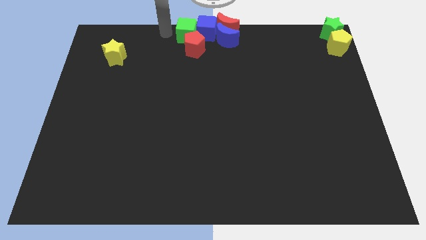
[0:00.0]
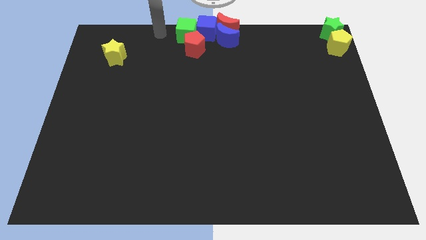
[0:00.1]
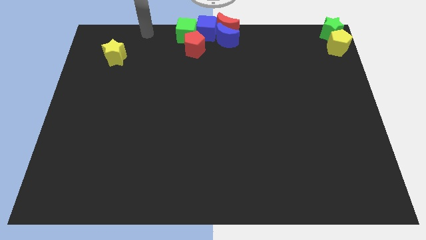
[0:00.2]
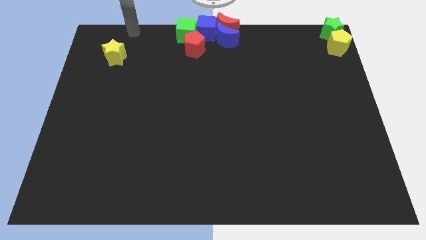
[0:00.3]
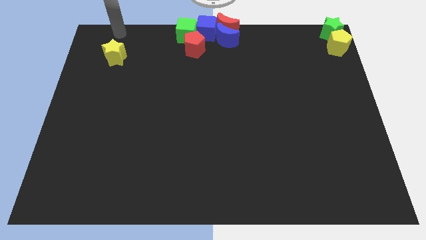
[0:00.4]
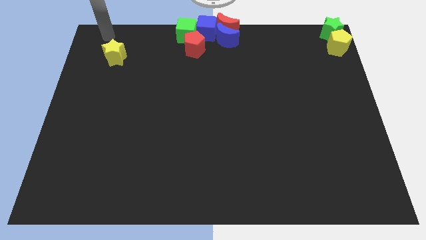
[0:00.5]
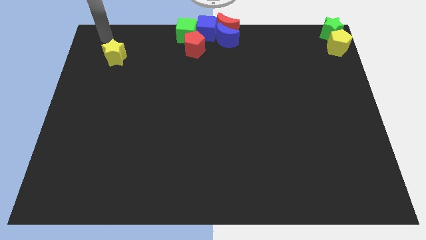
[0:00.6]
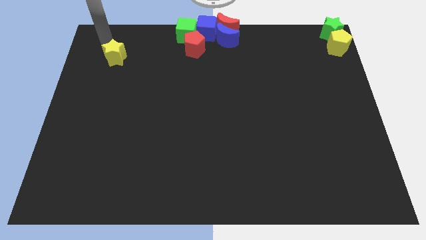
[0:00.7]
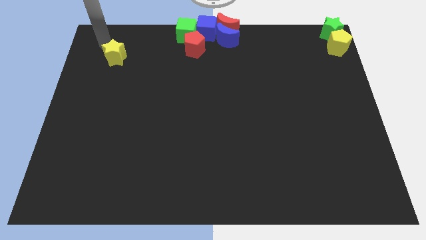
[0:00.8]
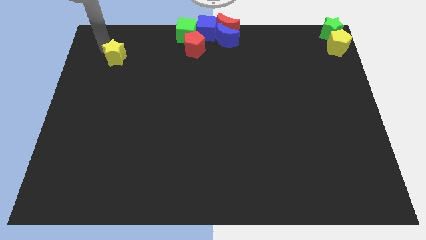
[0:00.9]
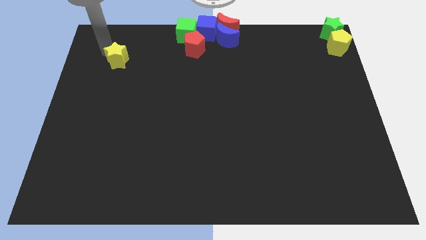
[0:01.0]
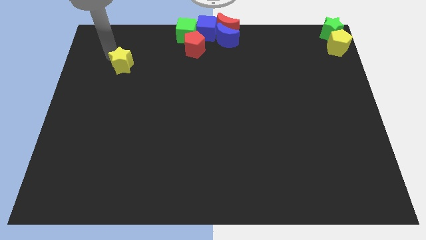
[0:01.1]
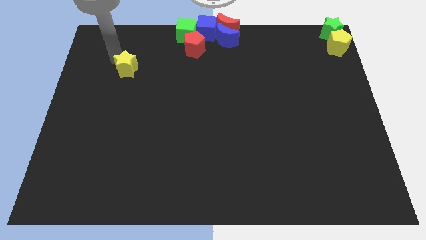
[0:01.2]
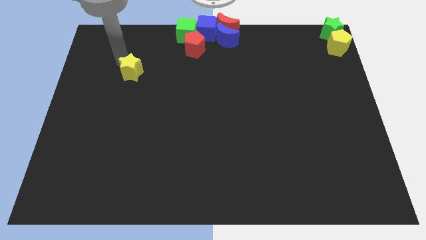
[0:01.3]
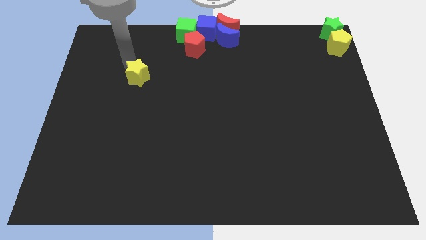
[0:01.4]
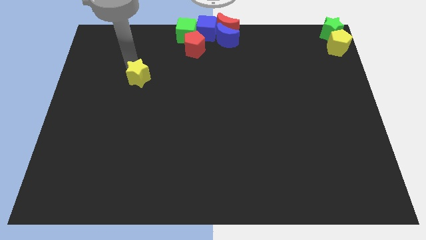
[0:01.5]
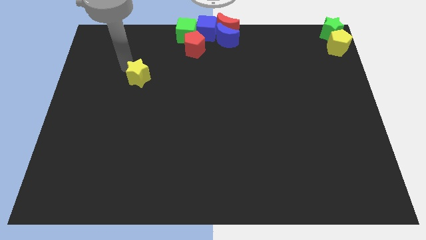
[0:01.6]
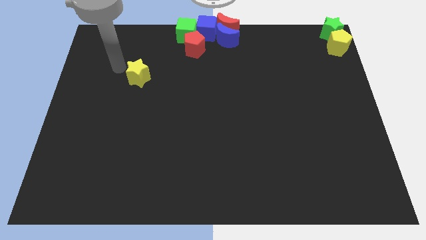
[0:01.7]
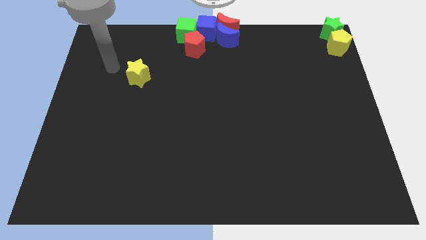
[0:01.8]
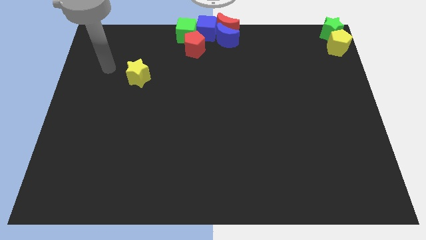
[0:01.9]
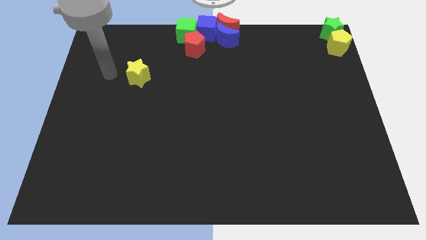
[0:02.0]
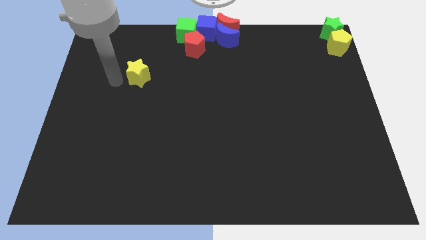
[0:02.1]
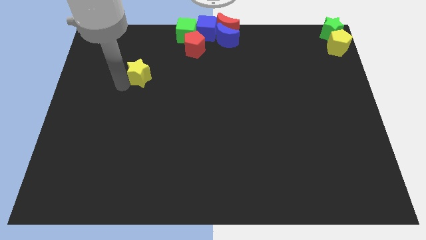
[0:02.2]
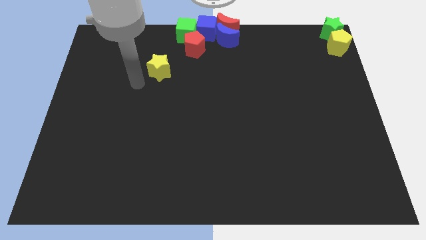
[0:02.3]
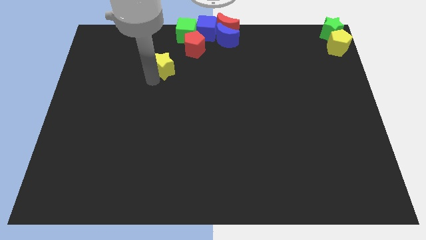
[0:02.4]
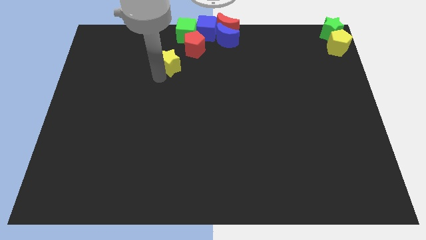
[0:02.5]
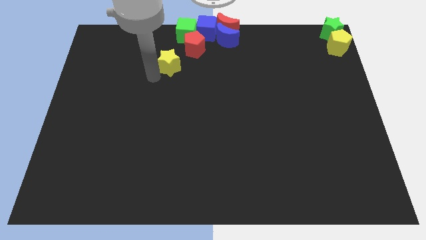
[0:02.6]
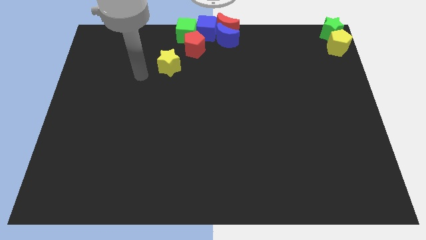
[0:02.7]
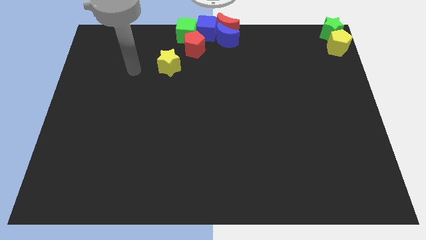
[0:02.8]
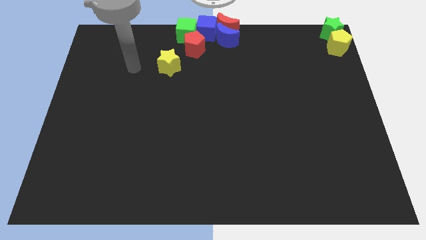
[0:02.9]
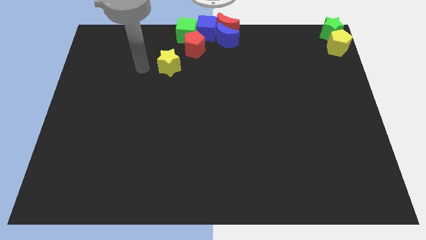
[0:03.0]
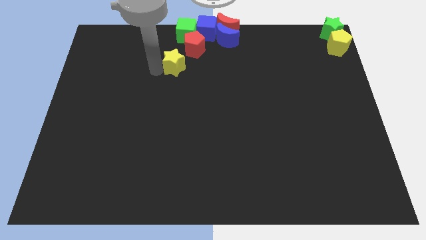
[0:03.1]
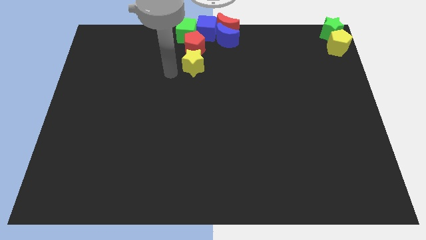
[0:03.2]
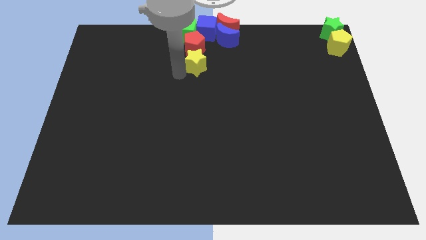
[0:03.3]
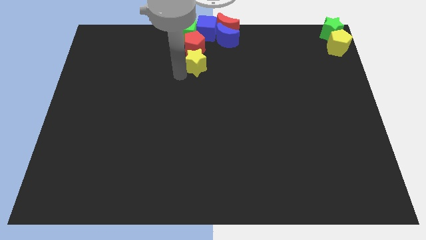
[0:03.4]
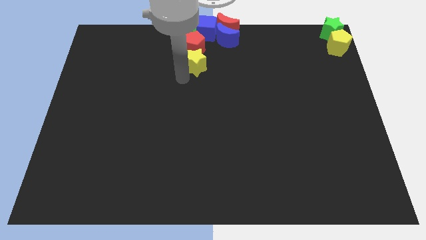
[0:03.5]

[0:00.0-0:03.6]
place the yellow star below the red pentagon

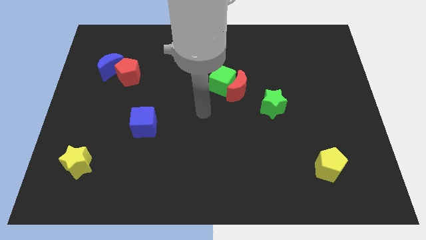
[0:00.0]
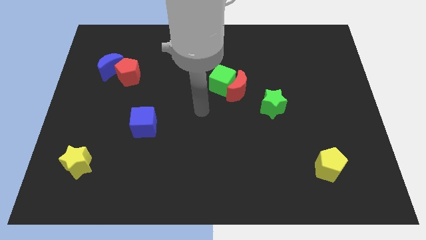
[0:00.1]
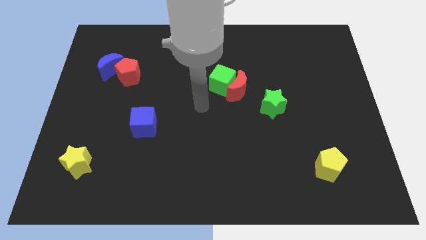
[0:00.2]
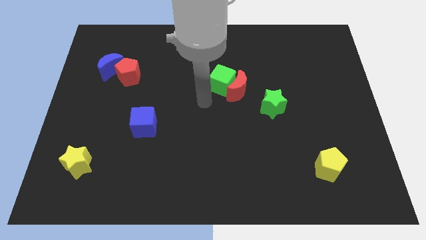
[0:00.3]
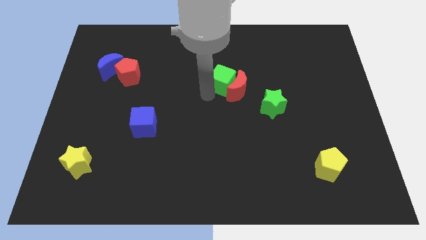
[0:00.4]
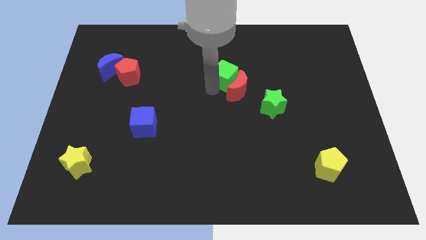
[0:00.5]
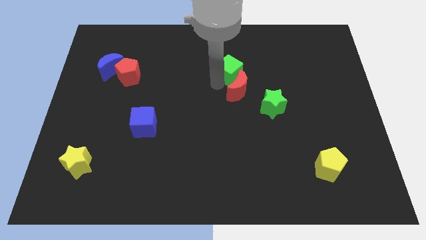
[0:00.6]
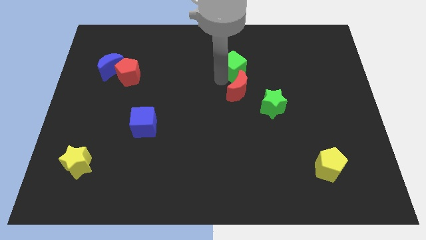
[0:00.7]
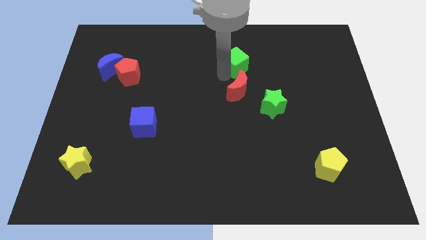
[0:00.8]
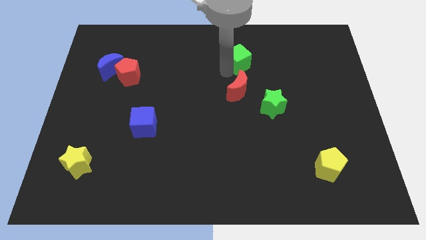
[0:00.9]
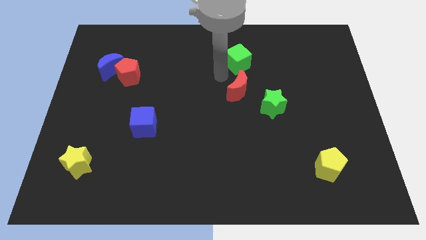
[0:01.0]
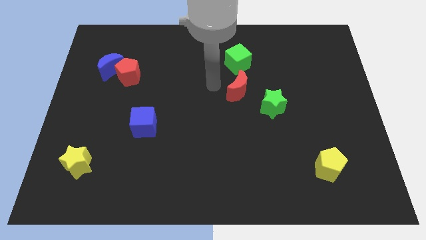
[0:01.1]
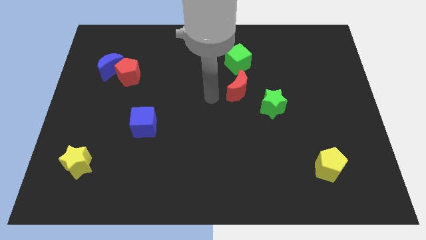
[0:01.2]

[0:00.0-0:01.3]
place the green cube vertically above the red moon

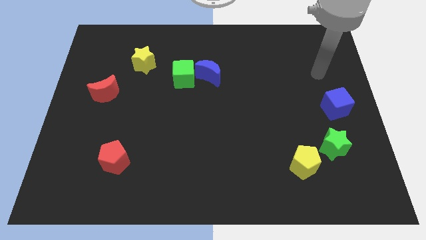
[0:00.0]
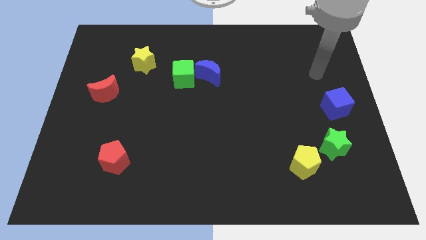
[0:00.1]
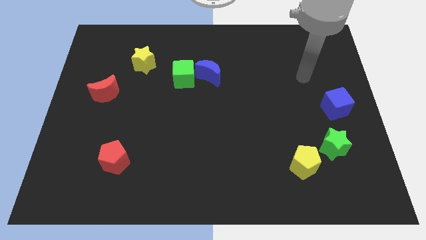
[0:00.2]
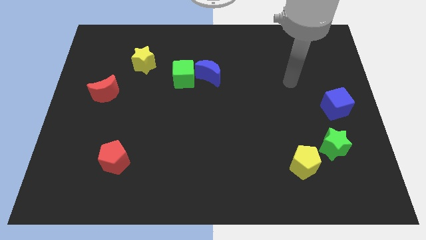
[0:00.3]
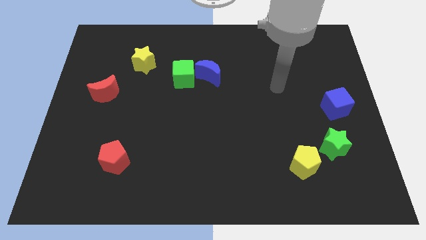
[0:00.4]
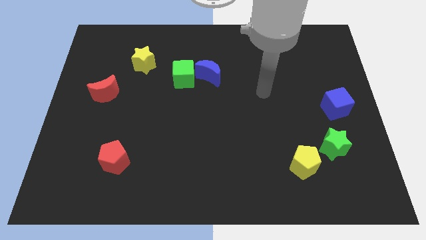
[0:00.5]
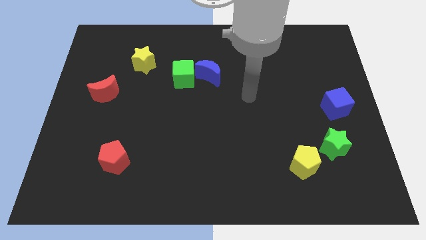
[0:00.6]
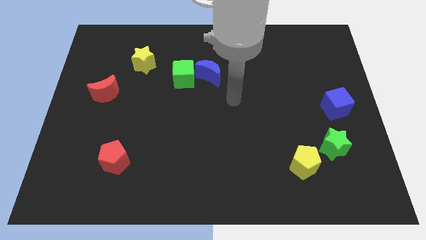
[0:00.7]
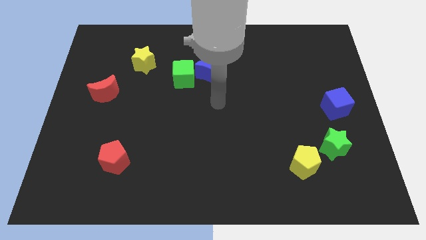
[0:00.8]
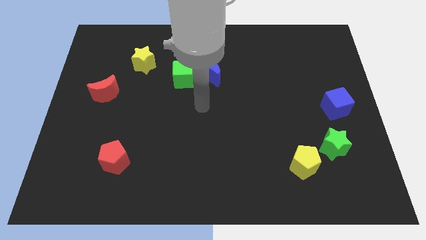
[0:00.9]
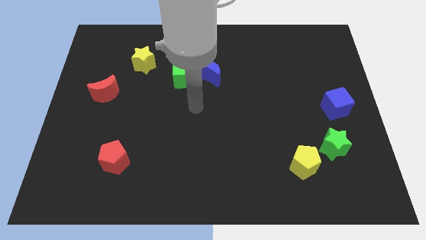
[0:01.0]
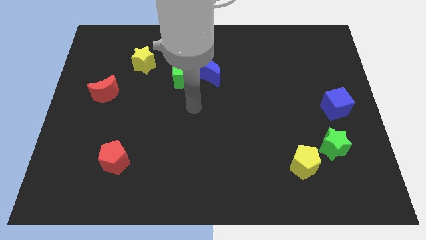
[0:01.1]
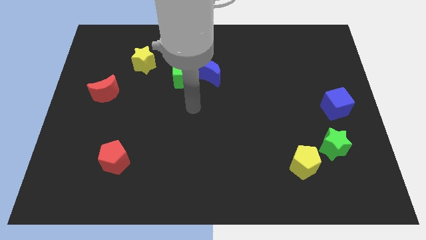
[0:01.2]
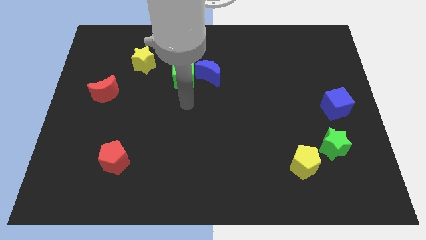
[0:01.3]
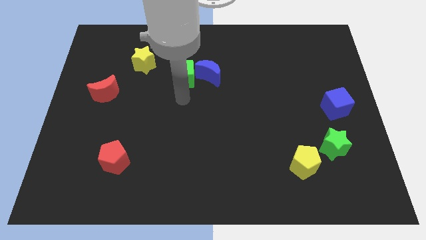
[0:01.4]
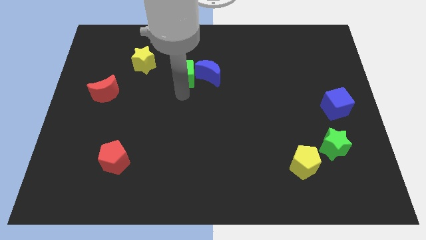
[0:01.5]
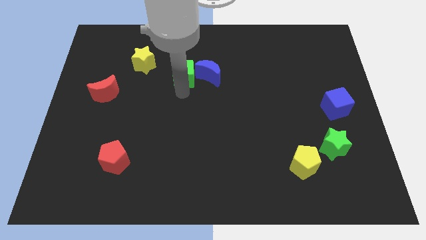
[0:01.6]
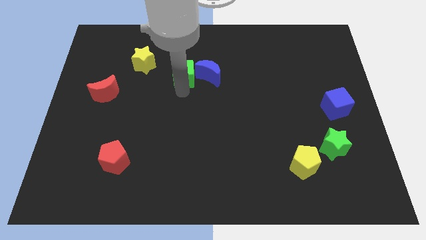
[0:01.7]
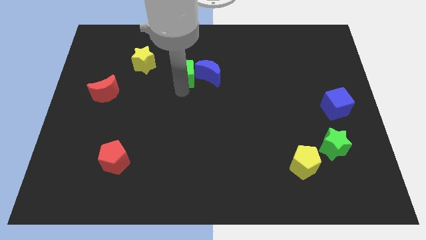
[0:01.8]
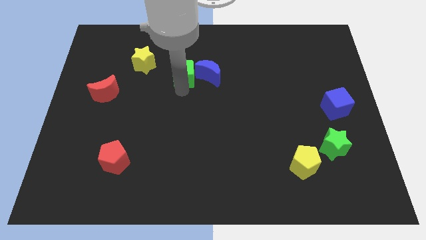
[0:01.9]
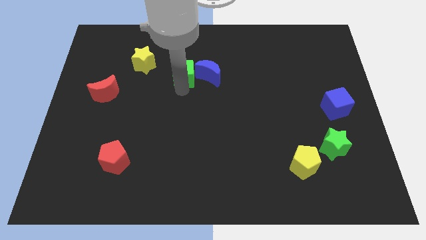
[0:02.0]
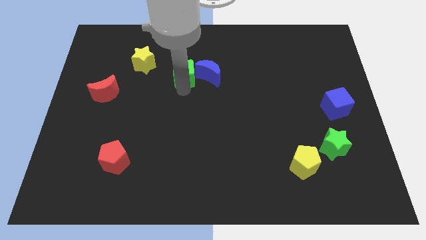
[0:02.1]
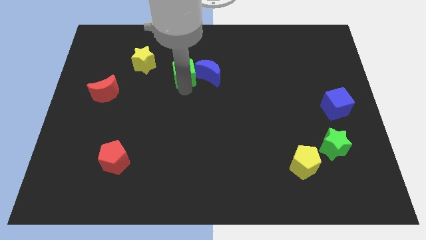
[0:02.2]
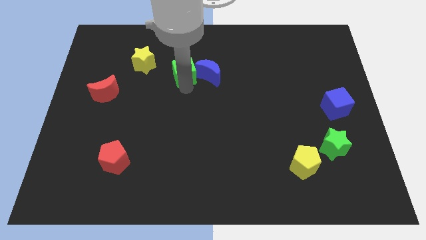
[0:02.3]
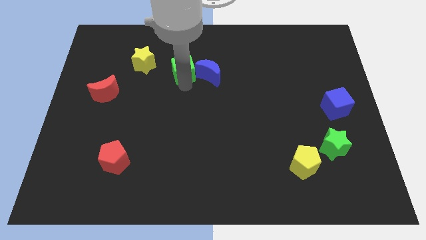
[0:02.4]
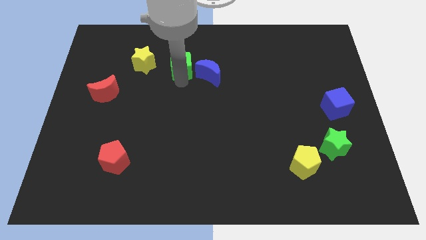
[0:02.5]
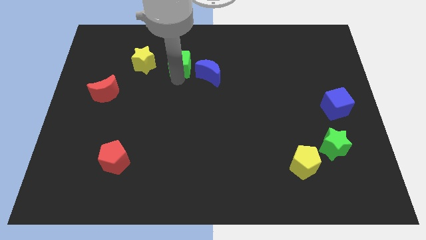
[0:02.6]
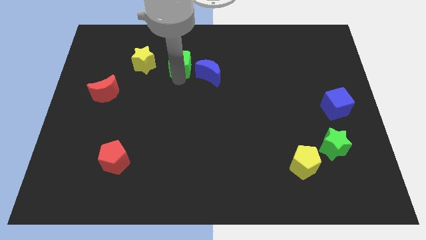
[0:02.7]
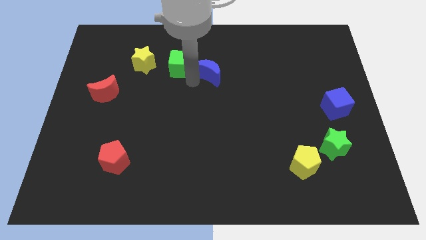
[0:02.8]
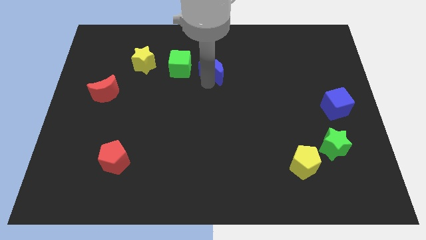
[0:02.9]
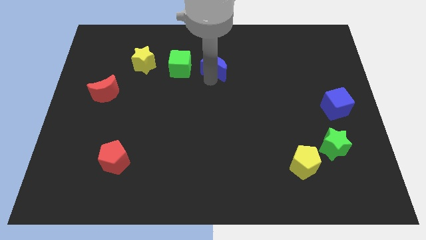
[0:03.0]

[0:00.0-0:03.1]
touch the bottom side of the blue crescent

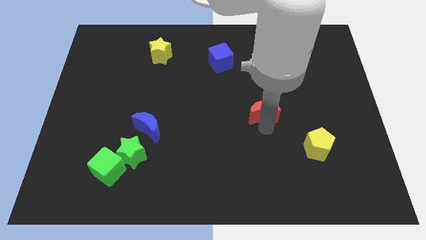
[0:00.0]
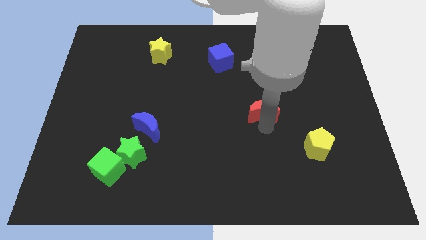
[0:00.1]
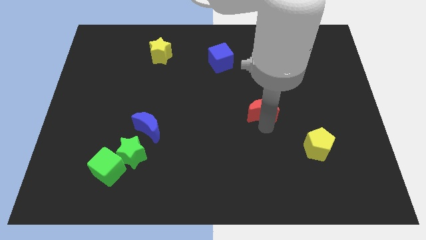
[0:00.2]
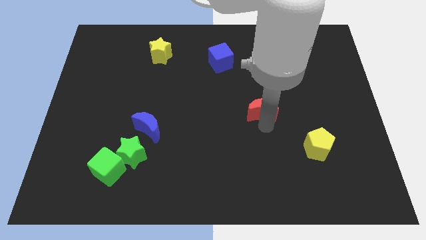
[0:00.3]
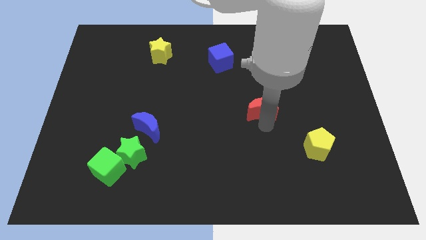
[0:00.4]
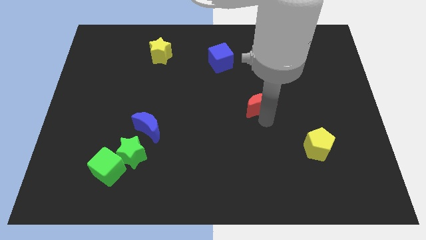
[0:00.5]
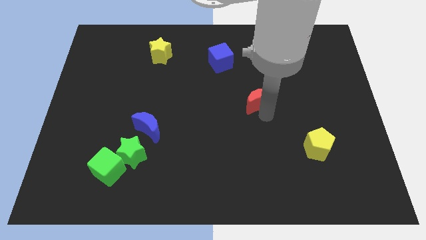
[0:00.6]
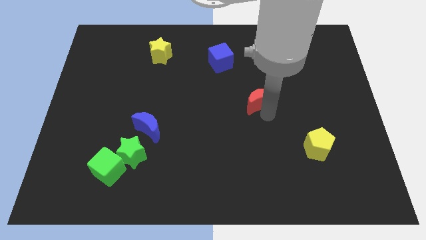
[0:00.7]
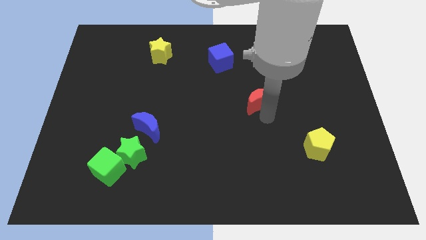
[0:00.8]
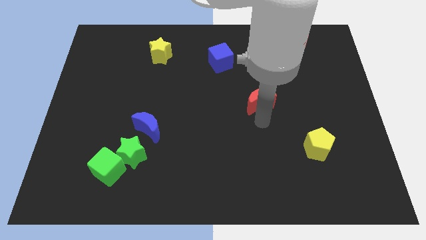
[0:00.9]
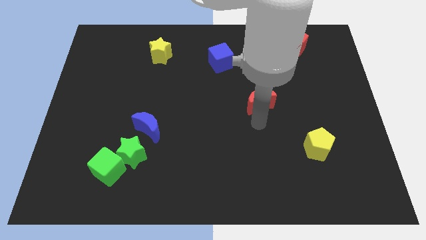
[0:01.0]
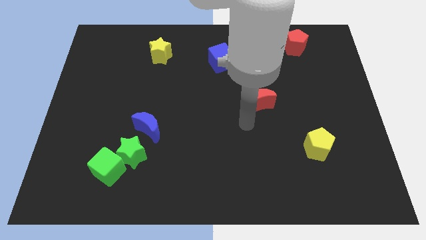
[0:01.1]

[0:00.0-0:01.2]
move red moon diagonally below the blue cube
